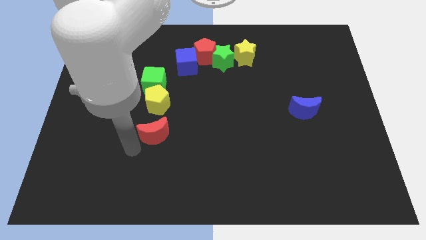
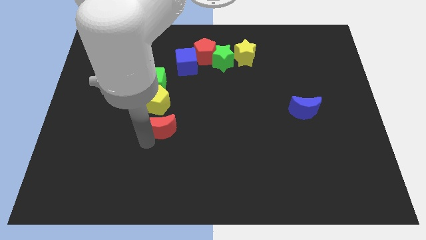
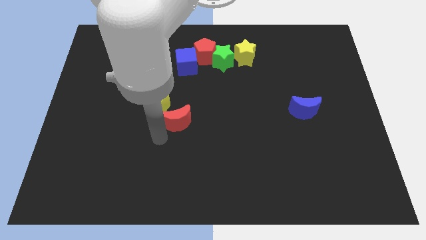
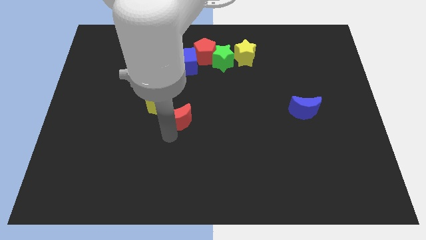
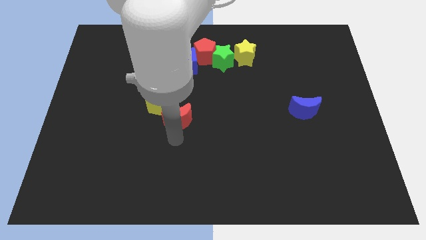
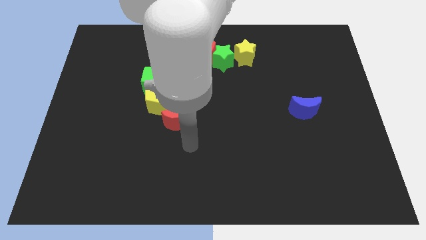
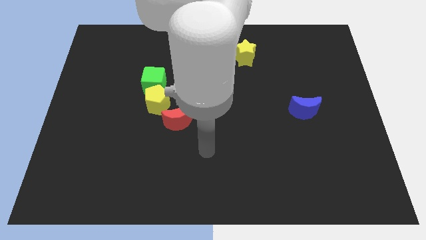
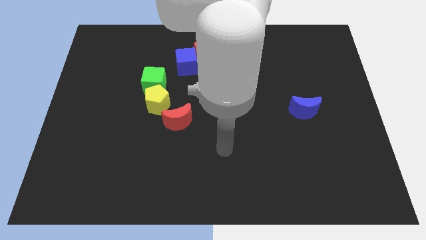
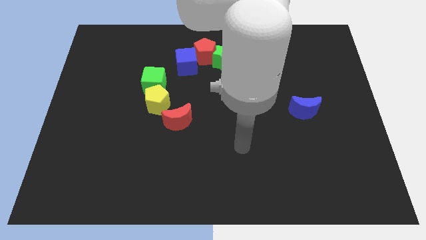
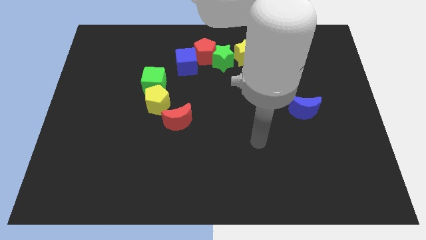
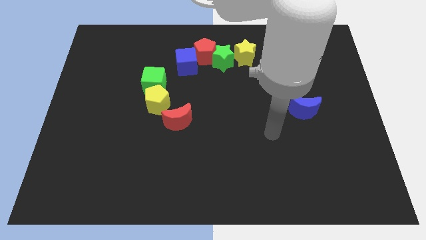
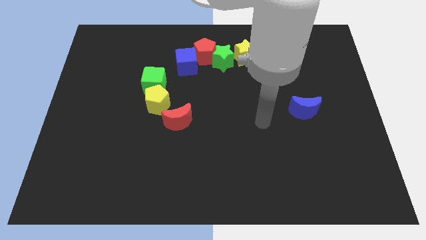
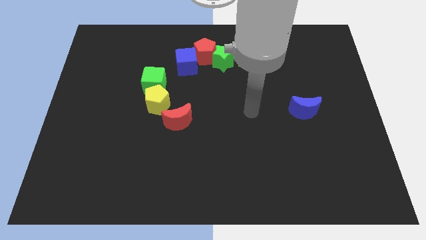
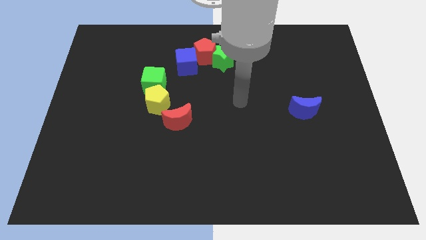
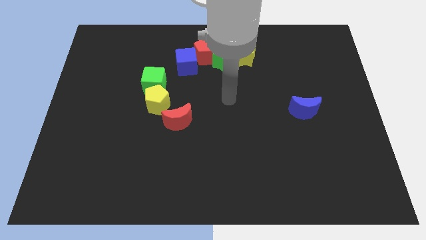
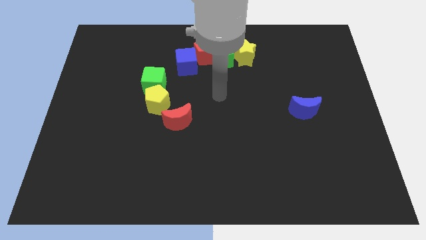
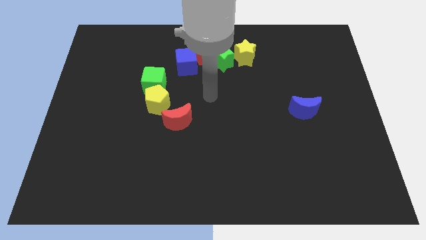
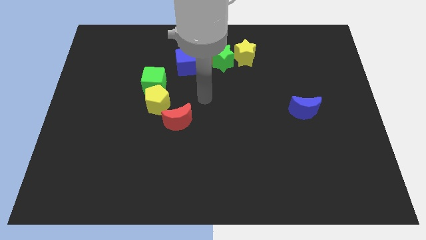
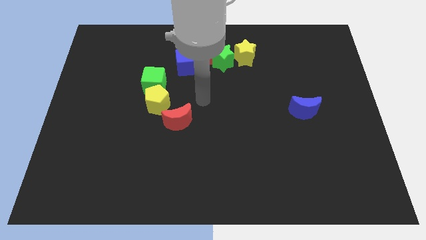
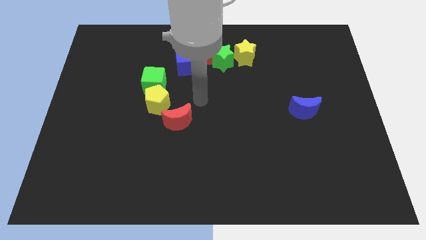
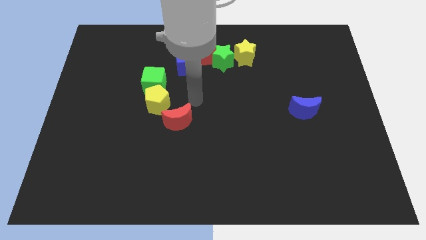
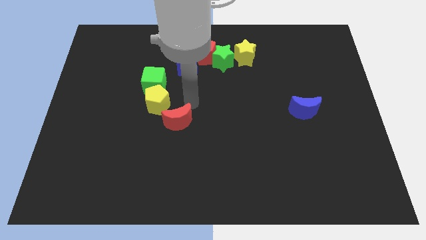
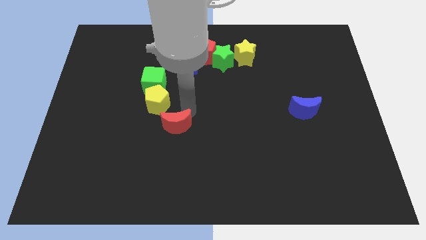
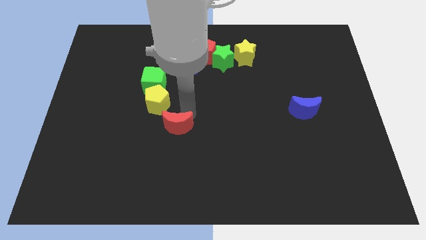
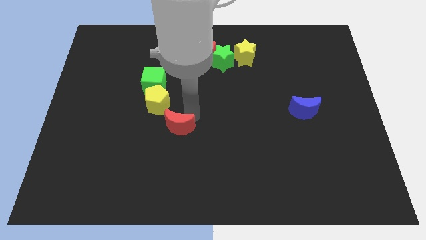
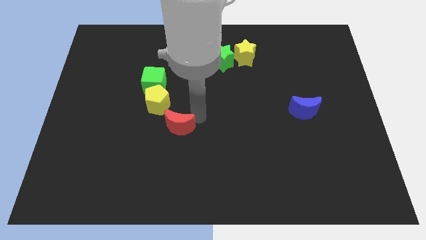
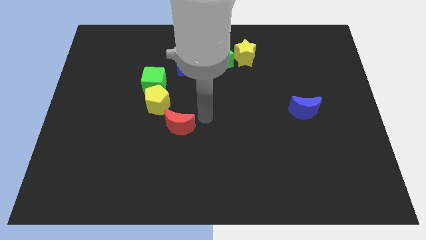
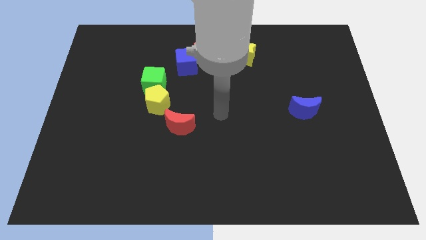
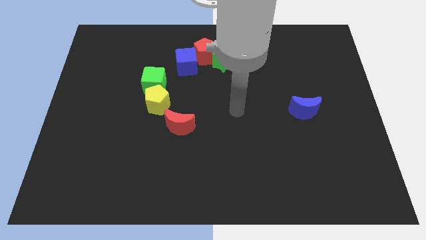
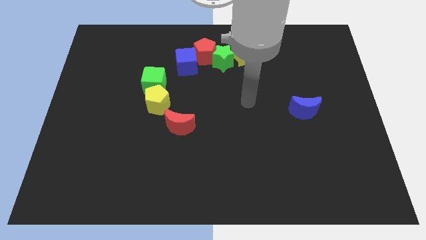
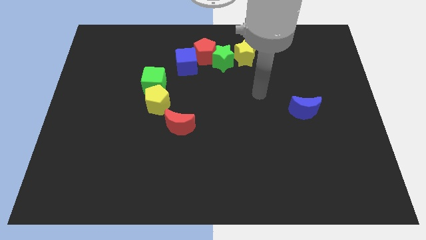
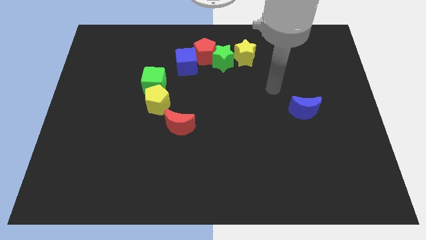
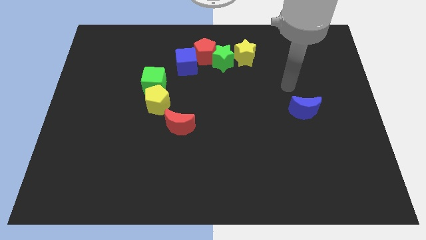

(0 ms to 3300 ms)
put the red moon at the bottom right side of the yellow pentagon

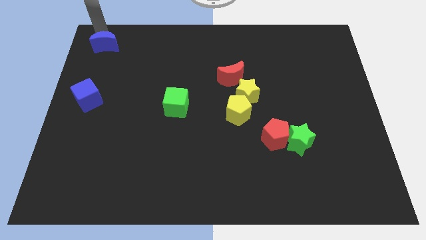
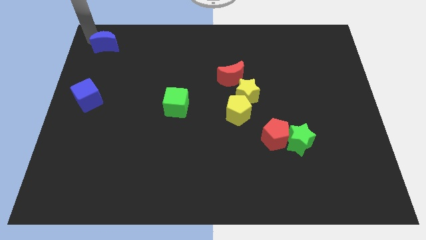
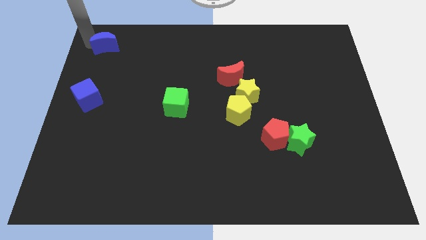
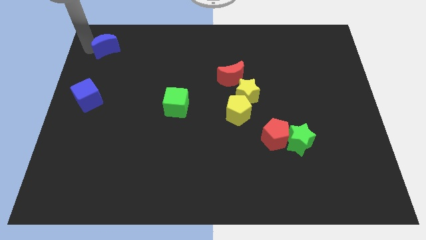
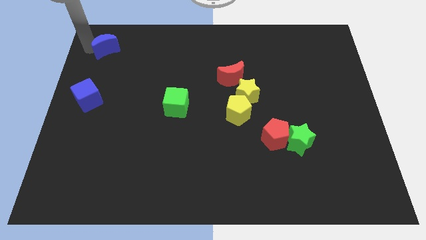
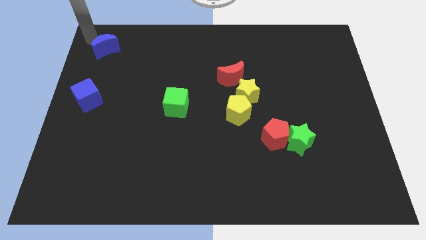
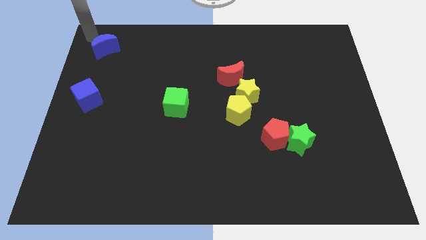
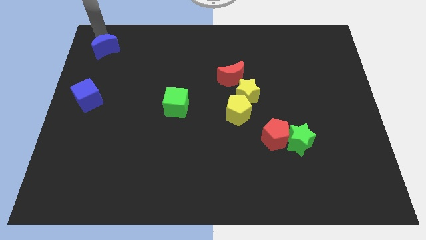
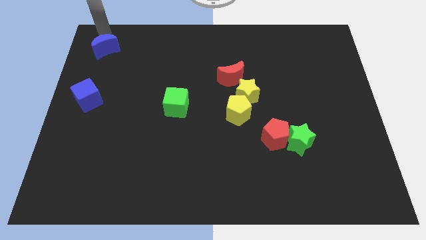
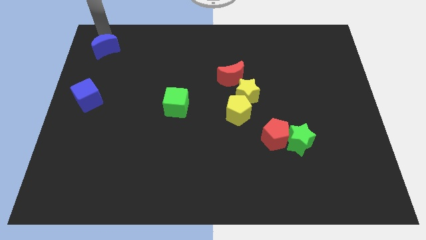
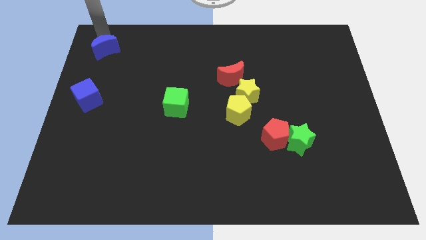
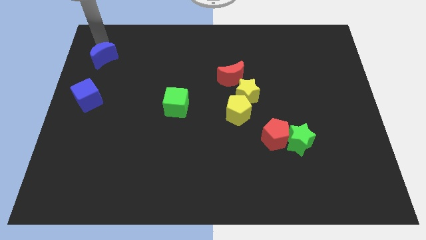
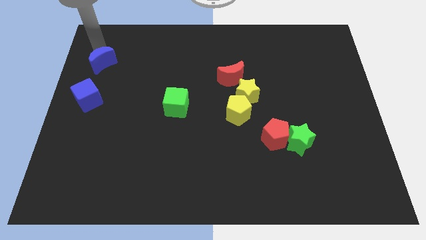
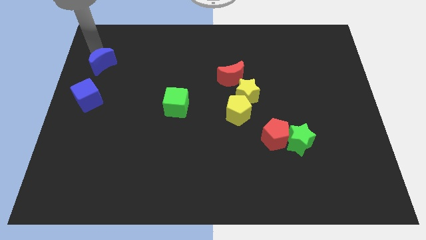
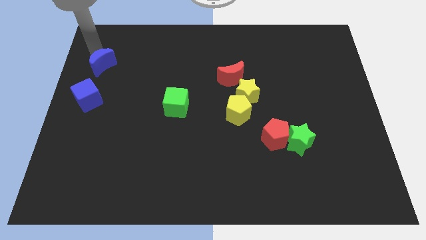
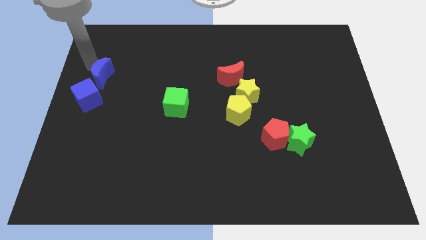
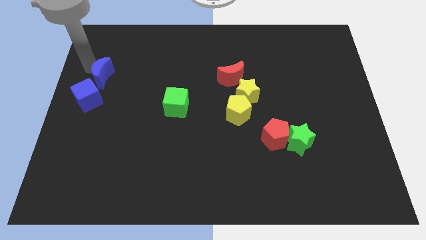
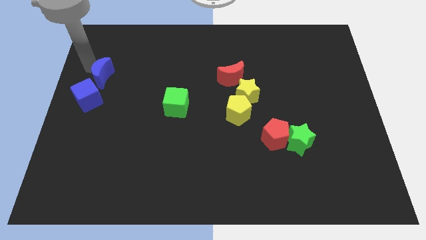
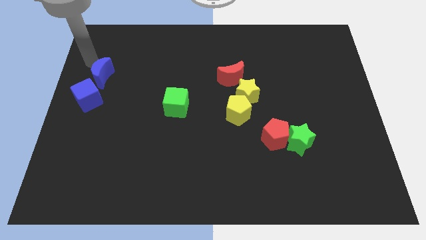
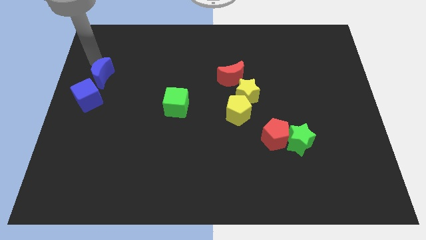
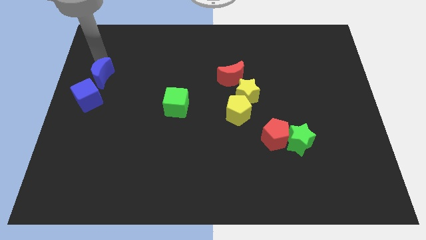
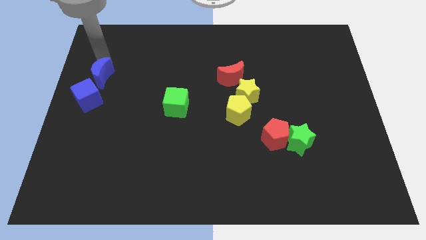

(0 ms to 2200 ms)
push the blue crescent towards the top right of the blue cube

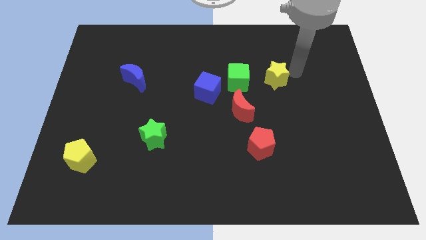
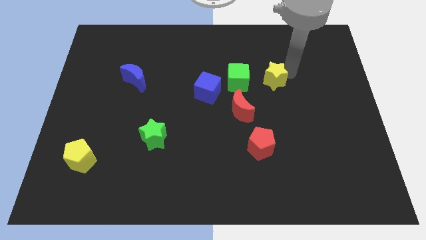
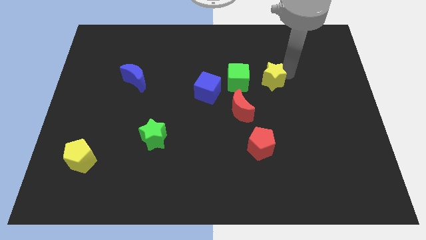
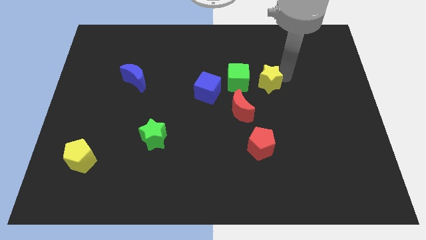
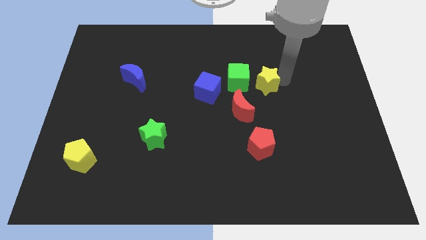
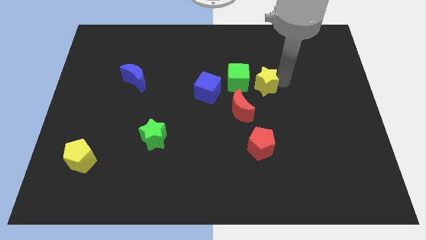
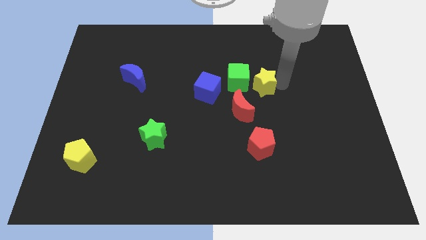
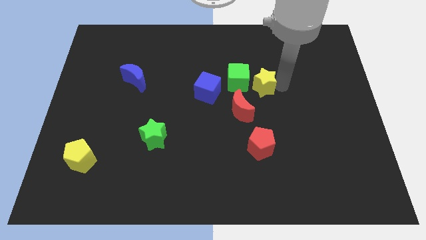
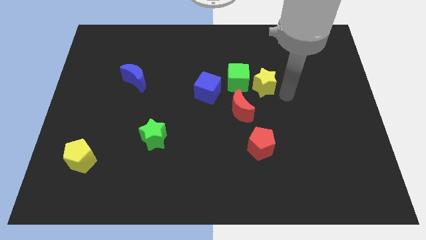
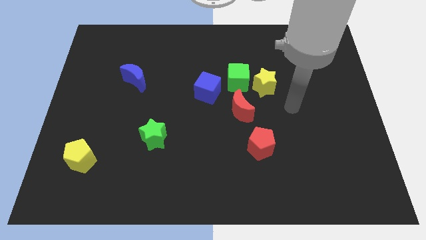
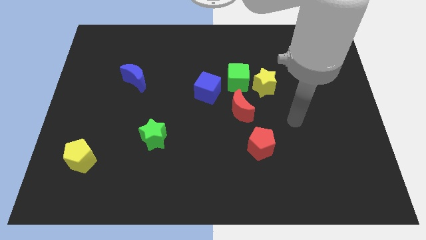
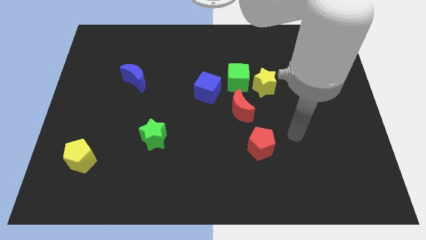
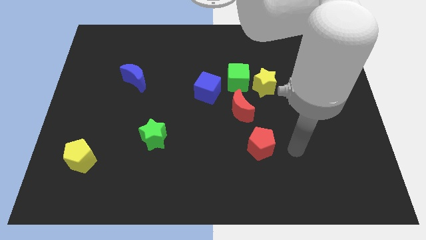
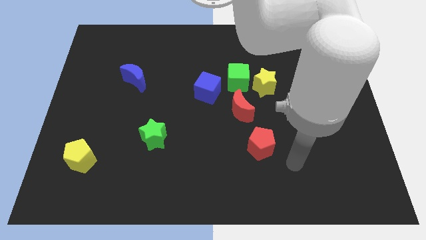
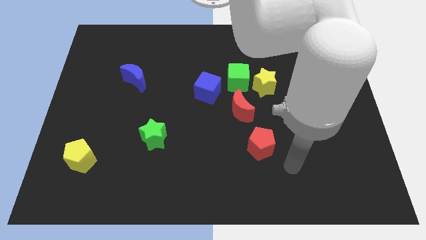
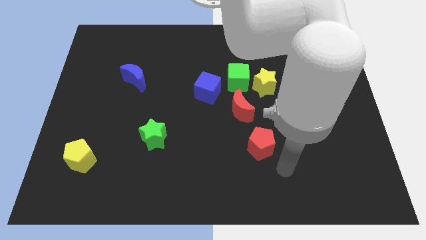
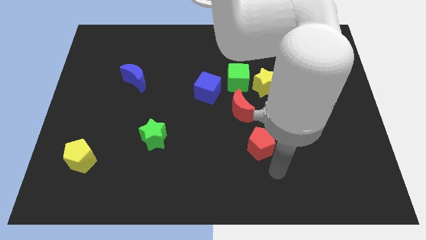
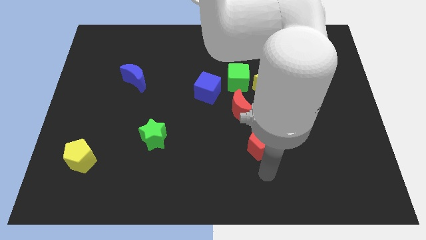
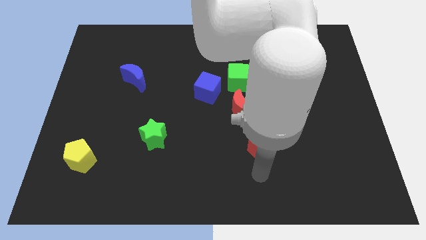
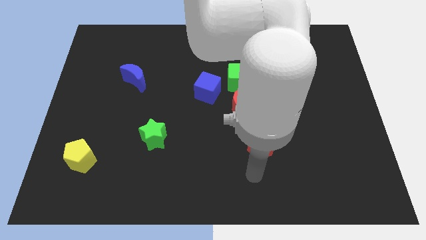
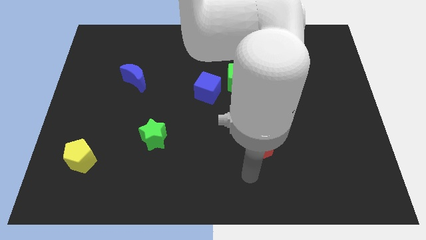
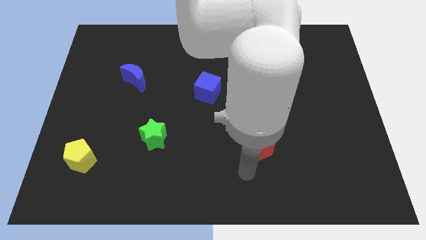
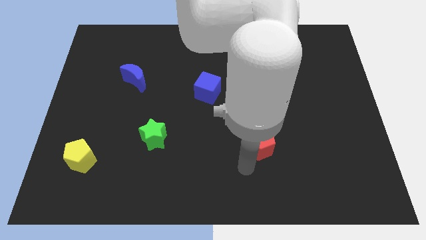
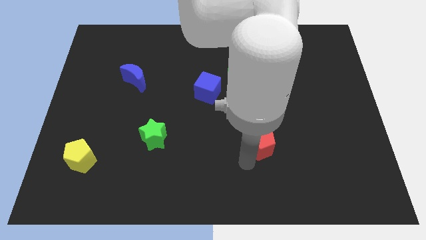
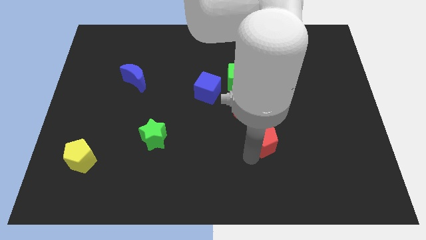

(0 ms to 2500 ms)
move your arm towards the bottom of the red pentagon

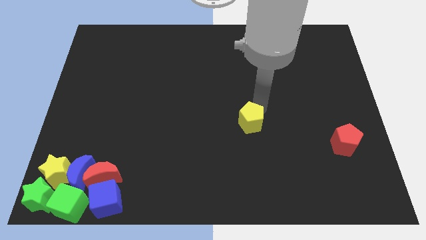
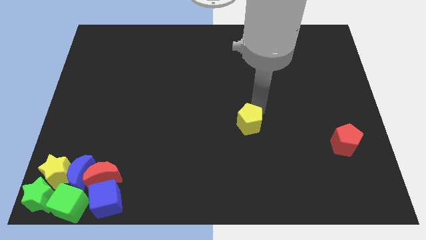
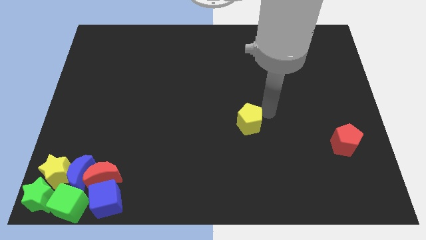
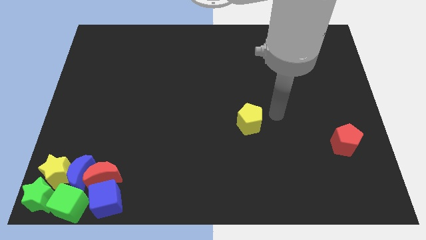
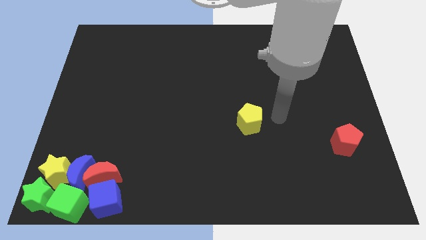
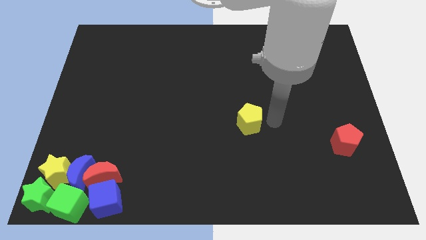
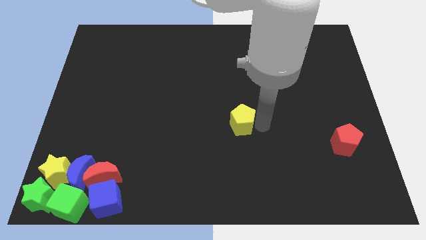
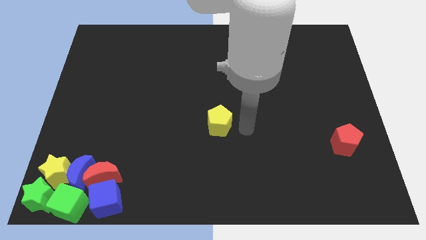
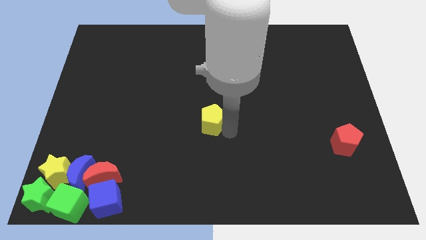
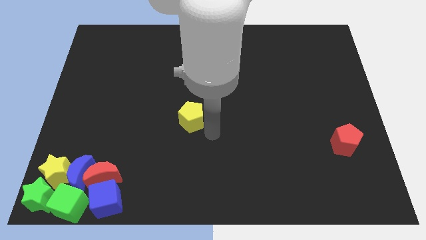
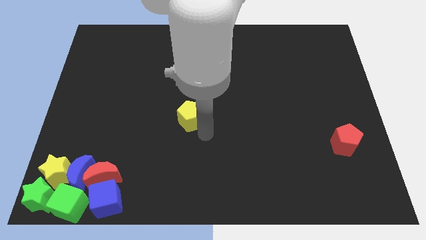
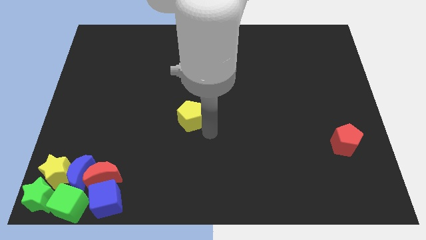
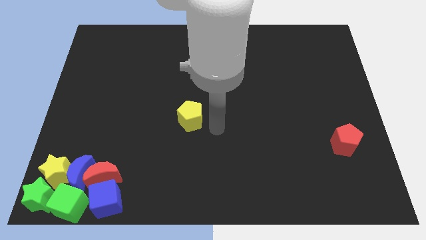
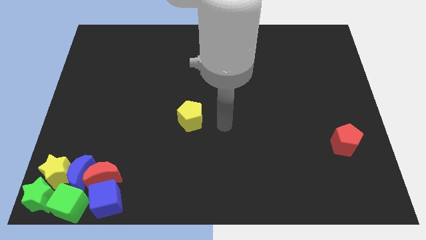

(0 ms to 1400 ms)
slide the yellow pentagon towards the left
